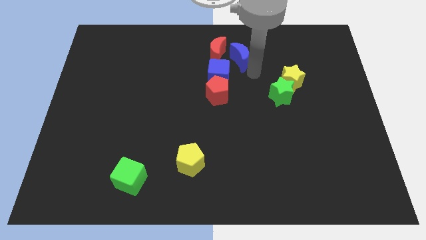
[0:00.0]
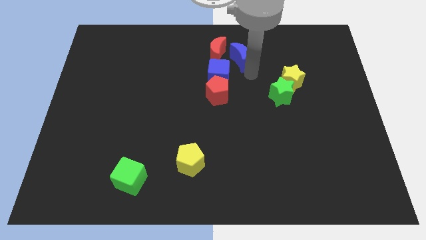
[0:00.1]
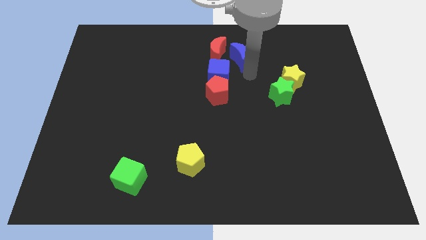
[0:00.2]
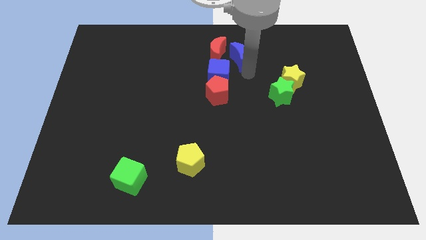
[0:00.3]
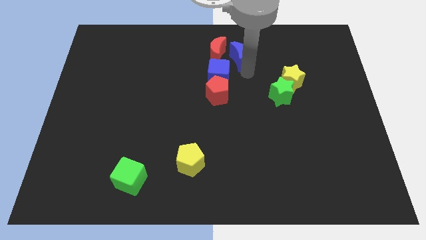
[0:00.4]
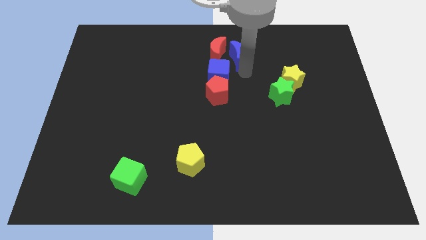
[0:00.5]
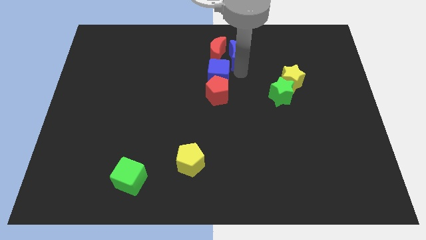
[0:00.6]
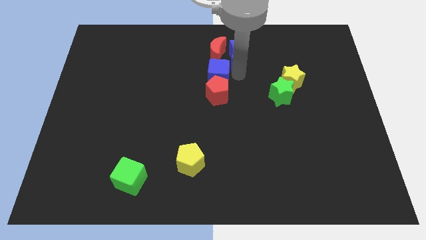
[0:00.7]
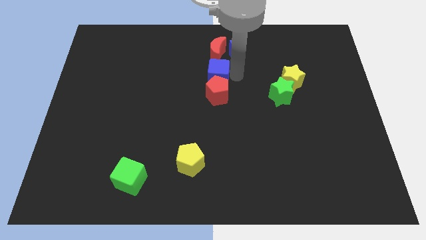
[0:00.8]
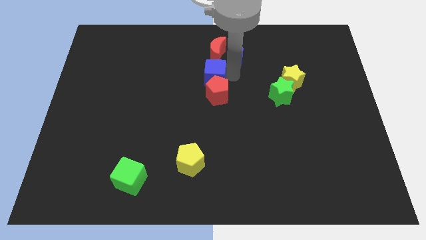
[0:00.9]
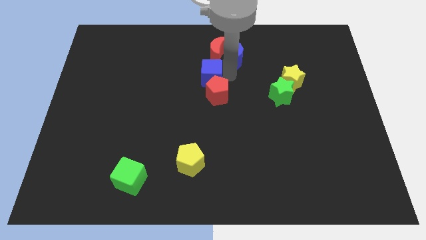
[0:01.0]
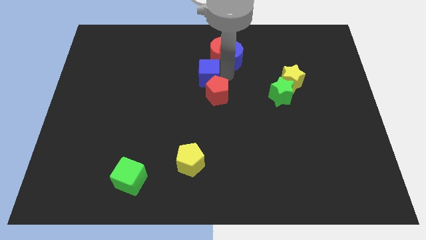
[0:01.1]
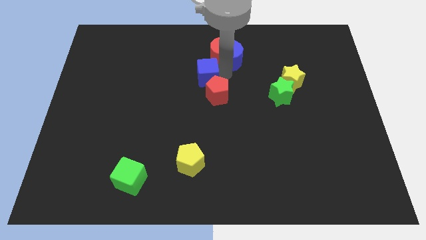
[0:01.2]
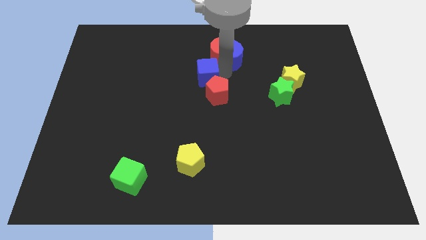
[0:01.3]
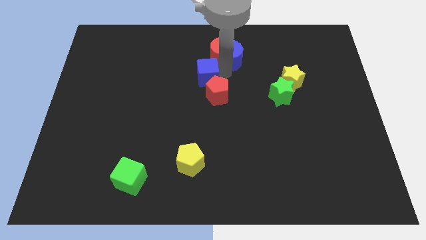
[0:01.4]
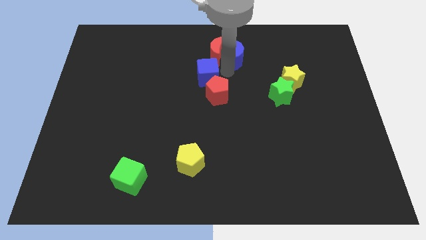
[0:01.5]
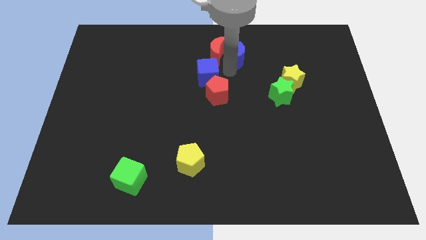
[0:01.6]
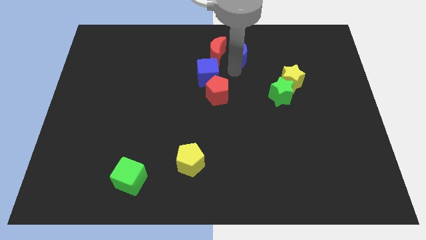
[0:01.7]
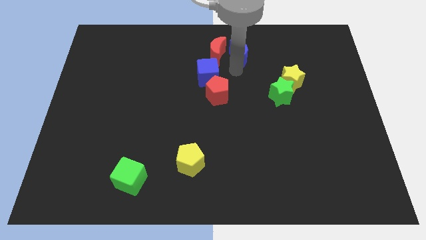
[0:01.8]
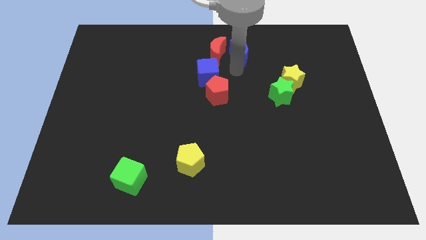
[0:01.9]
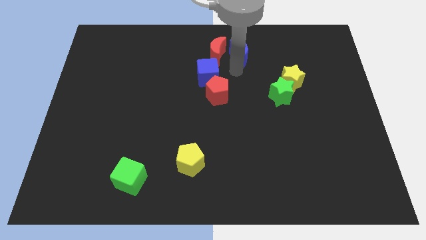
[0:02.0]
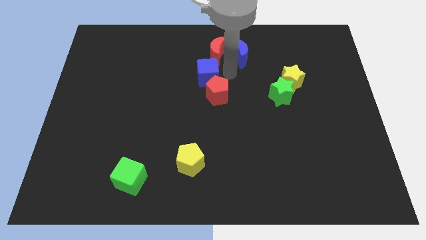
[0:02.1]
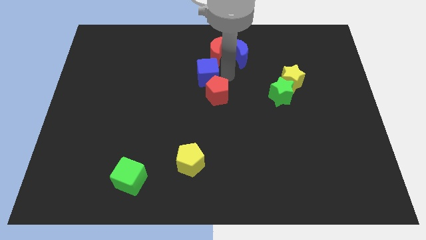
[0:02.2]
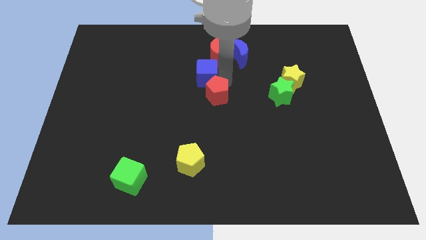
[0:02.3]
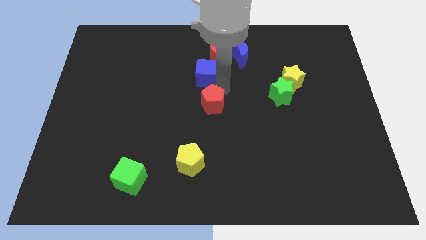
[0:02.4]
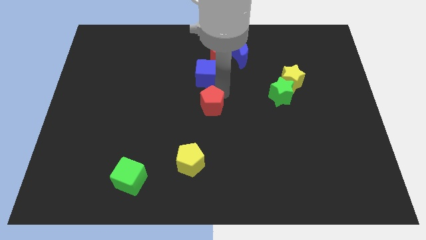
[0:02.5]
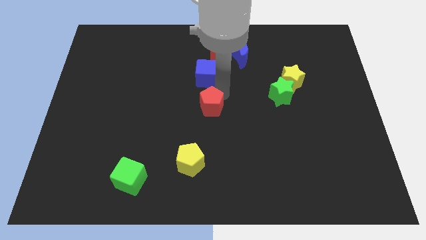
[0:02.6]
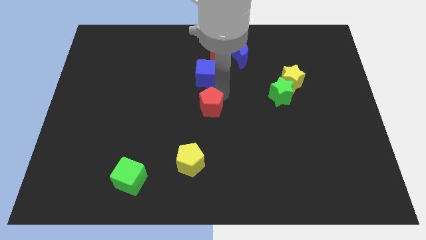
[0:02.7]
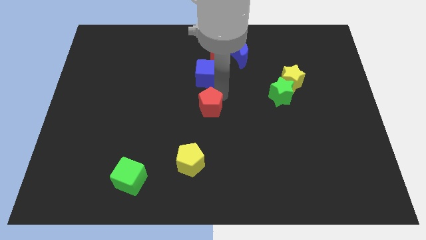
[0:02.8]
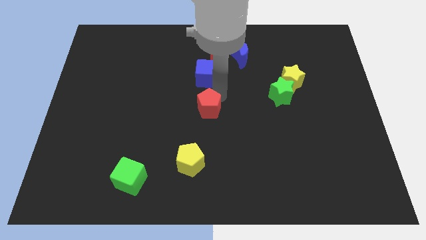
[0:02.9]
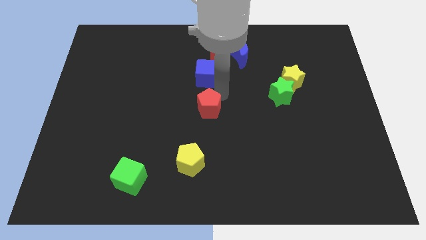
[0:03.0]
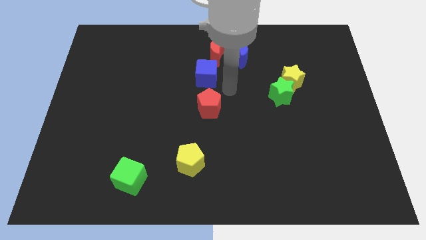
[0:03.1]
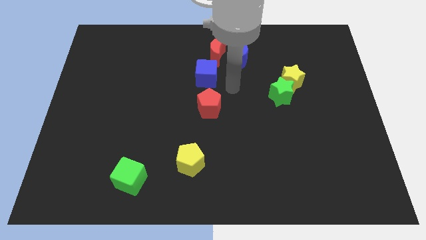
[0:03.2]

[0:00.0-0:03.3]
push the red pentagon to the down

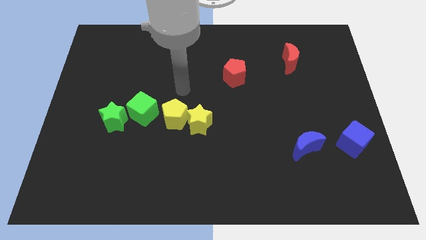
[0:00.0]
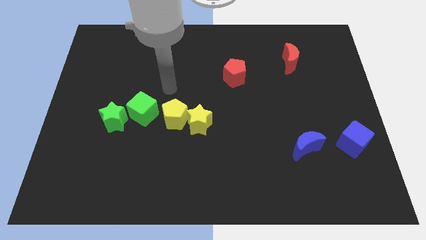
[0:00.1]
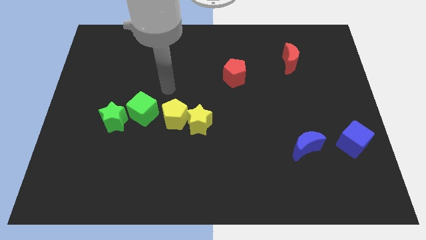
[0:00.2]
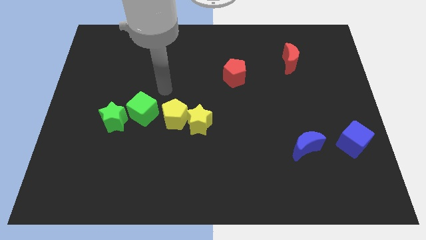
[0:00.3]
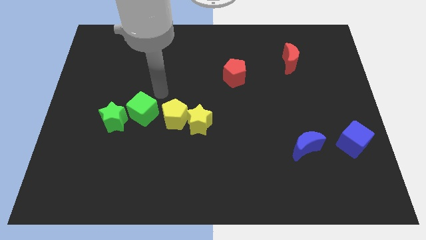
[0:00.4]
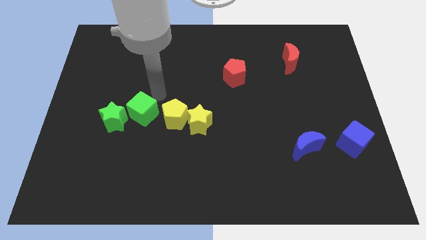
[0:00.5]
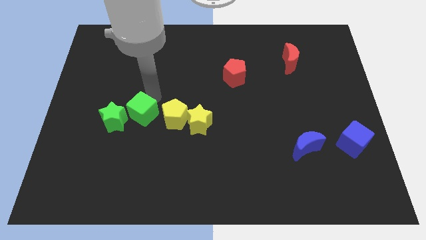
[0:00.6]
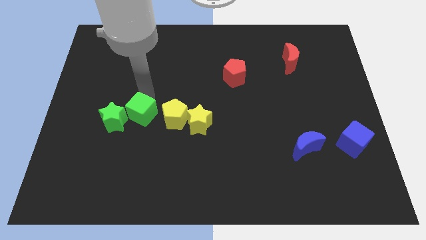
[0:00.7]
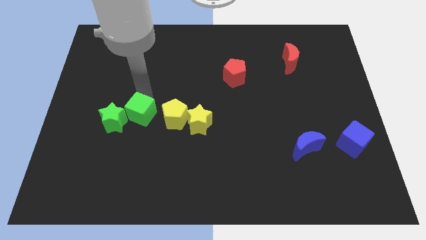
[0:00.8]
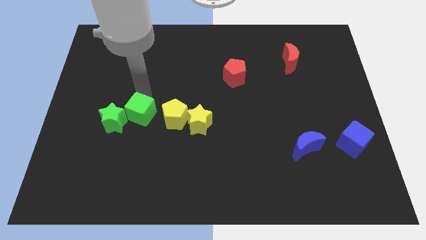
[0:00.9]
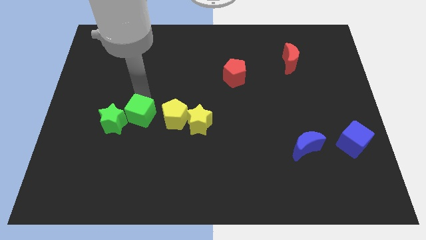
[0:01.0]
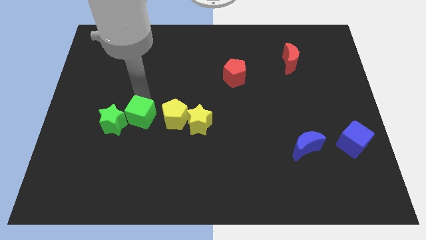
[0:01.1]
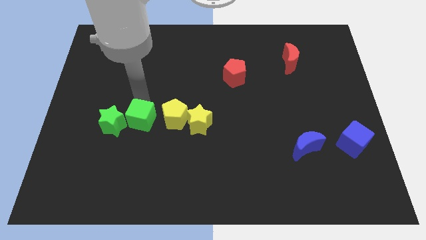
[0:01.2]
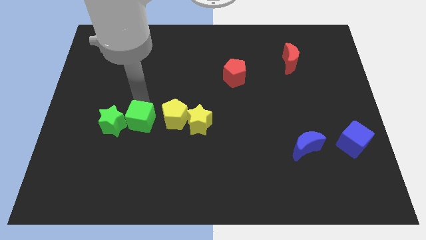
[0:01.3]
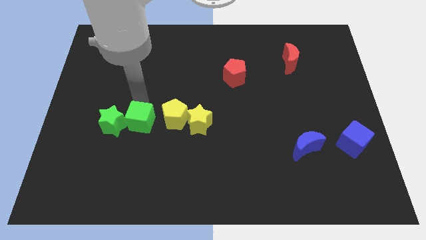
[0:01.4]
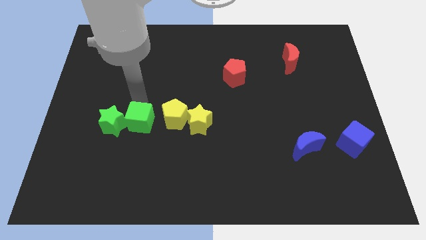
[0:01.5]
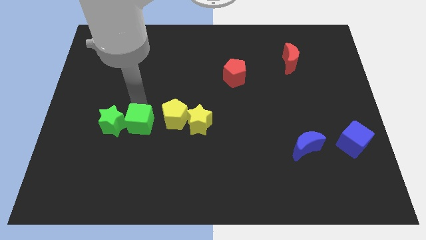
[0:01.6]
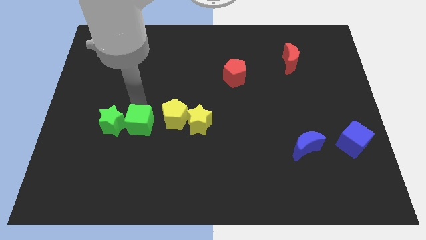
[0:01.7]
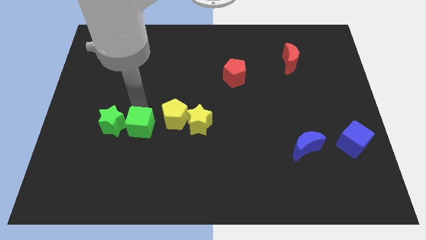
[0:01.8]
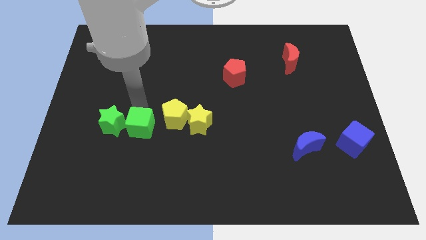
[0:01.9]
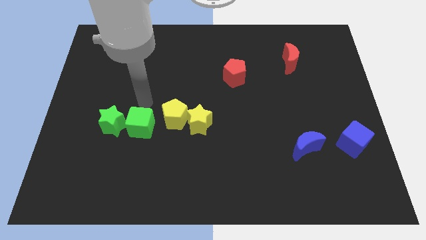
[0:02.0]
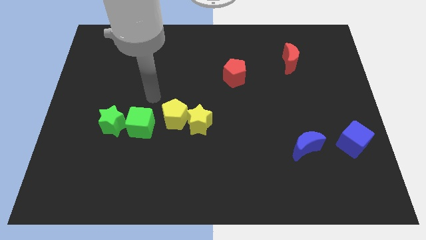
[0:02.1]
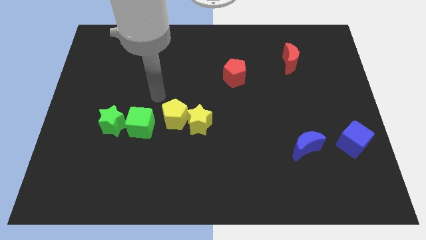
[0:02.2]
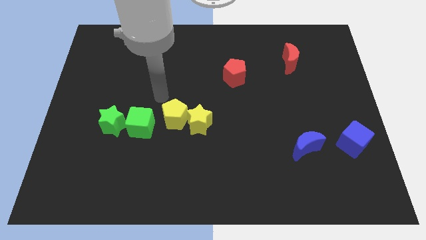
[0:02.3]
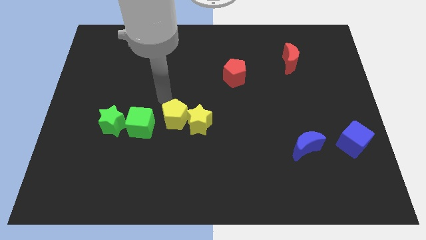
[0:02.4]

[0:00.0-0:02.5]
push green cube into green star

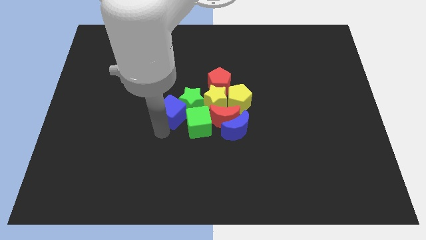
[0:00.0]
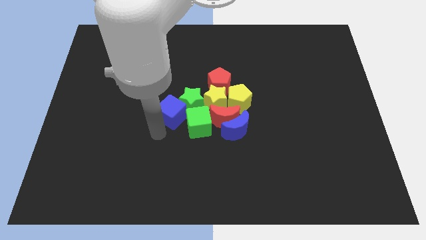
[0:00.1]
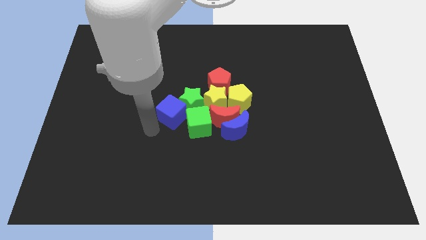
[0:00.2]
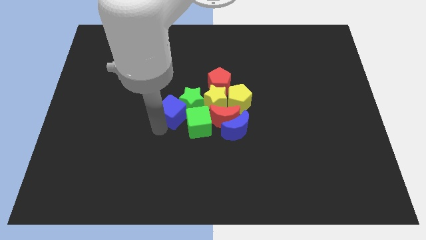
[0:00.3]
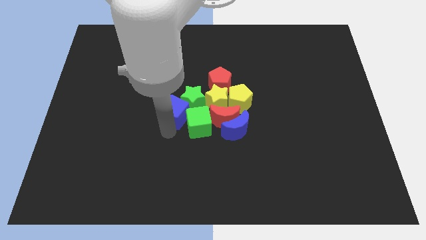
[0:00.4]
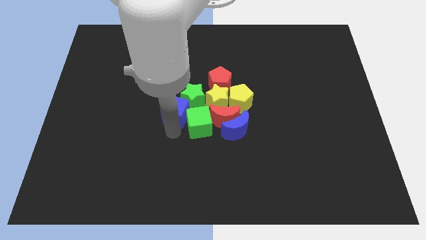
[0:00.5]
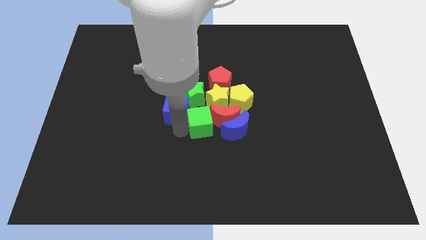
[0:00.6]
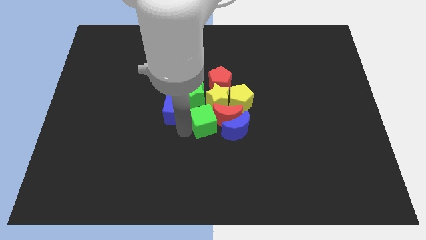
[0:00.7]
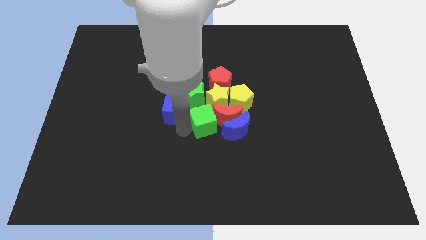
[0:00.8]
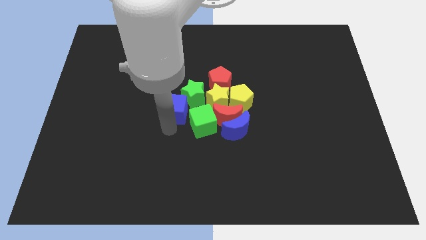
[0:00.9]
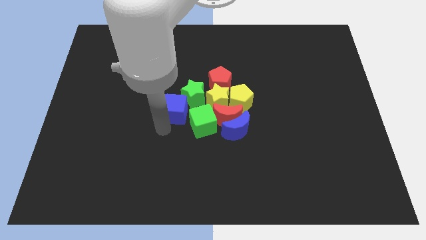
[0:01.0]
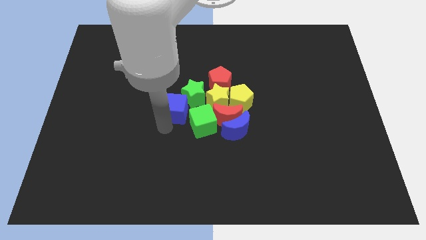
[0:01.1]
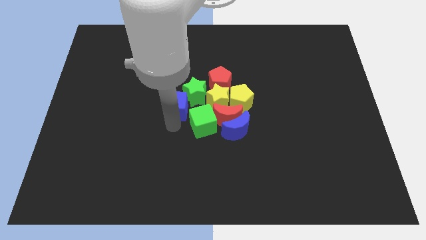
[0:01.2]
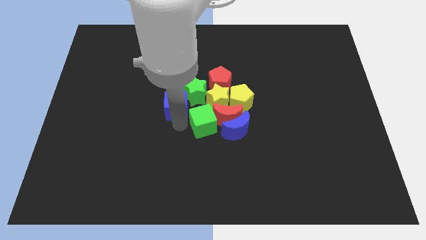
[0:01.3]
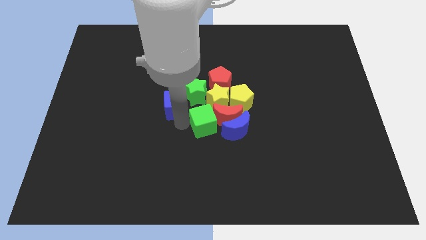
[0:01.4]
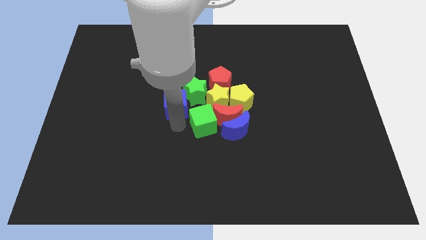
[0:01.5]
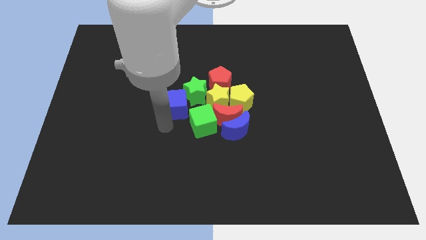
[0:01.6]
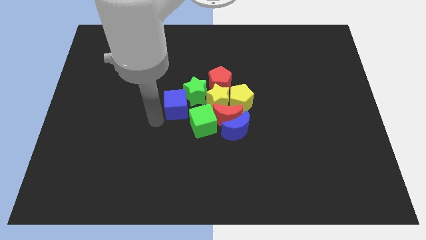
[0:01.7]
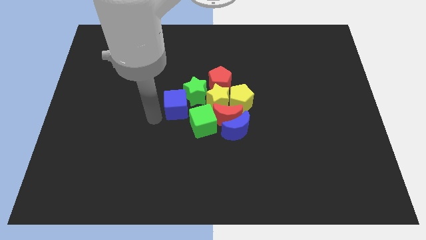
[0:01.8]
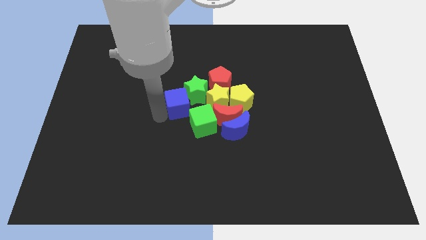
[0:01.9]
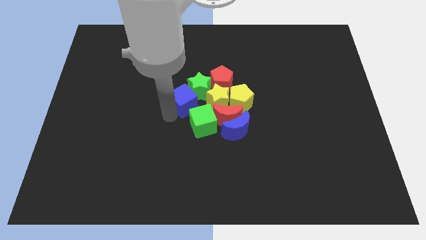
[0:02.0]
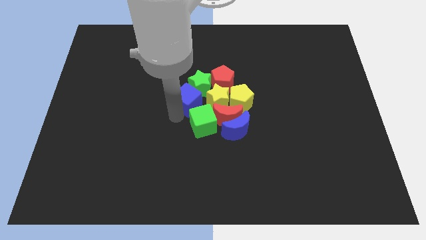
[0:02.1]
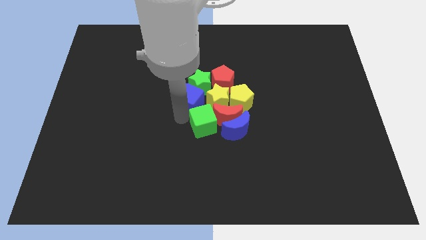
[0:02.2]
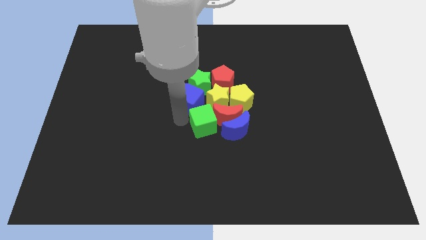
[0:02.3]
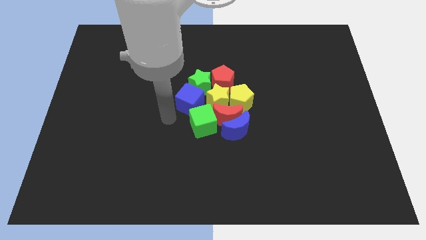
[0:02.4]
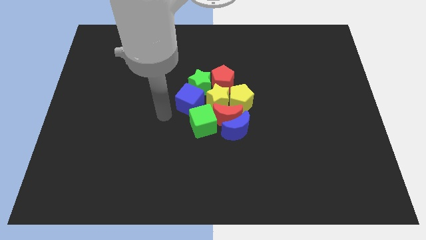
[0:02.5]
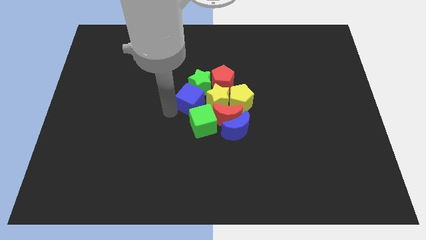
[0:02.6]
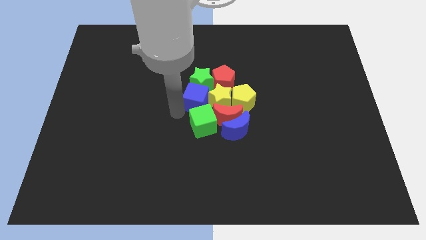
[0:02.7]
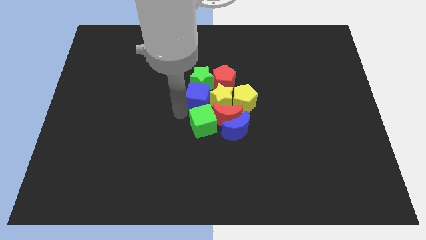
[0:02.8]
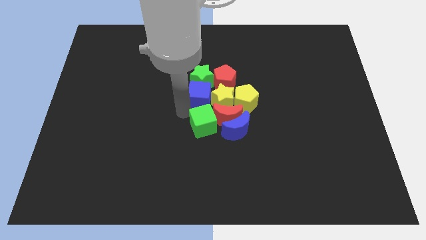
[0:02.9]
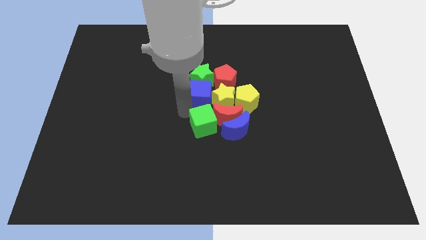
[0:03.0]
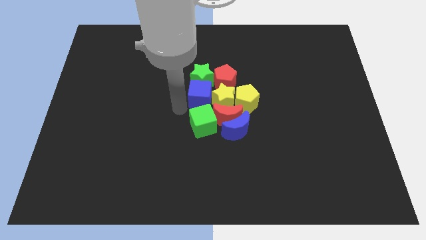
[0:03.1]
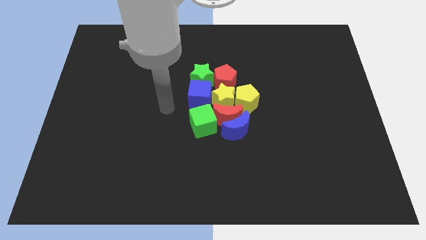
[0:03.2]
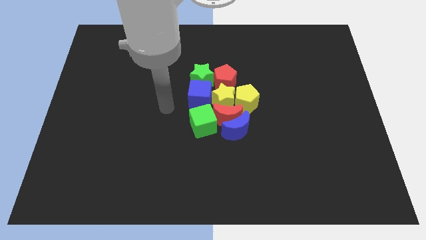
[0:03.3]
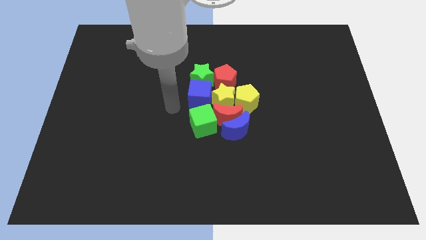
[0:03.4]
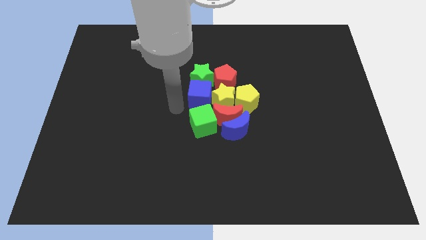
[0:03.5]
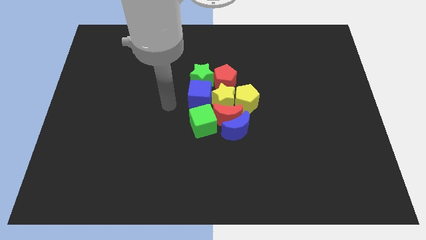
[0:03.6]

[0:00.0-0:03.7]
place the blue cube in between green star and the green cube
